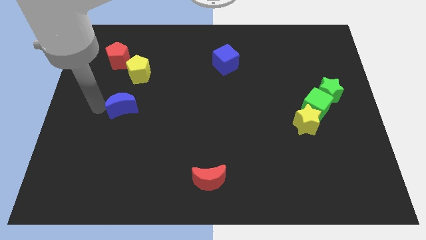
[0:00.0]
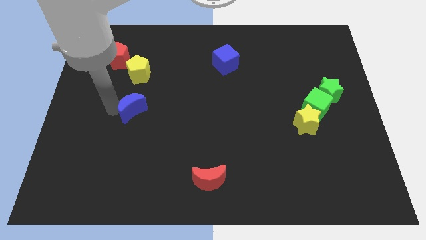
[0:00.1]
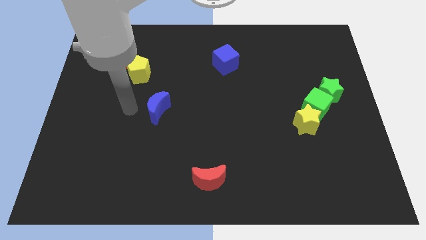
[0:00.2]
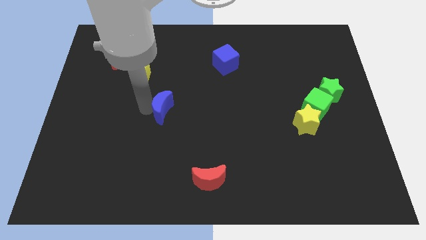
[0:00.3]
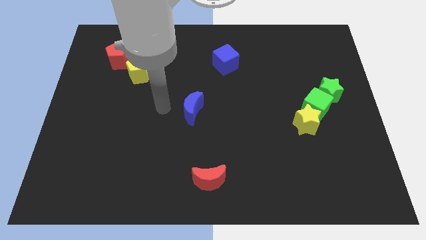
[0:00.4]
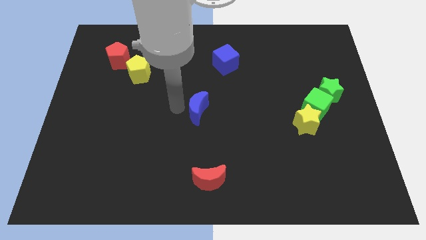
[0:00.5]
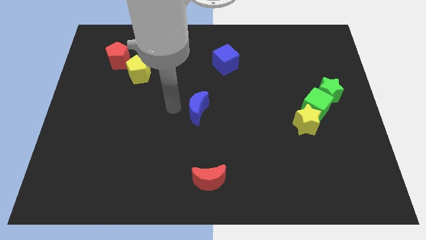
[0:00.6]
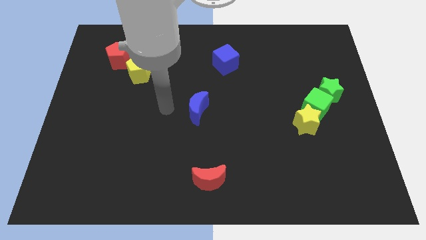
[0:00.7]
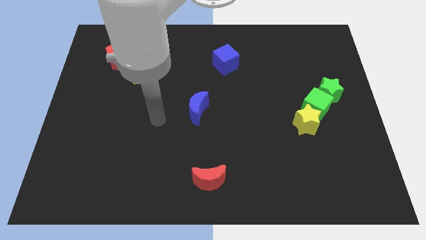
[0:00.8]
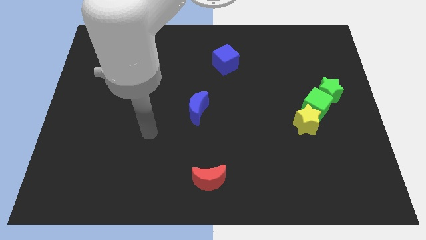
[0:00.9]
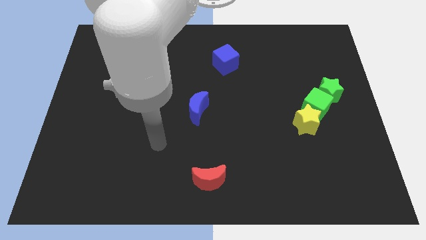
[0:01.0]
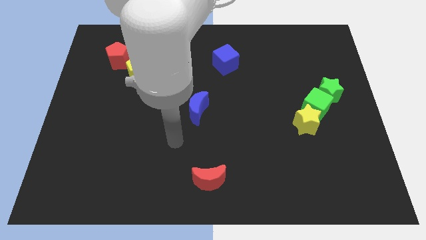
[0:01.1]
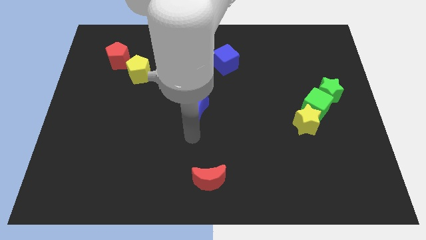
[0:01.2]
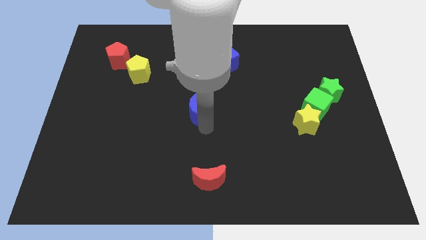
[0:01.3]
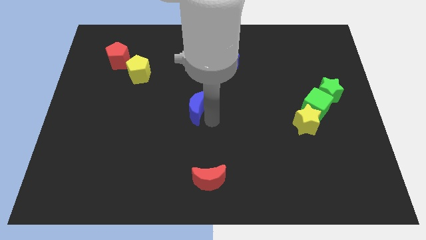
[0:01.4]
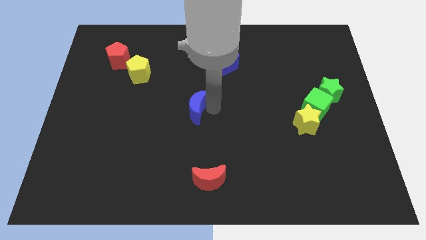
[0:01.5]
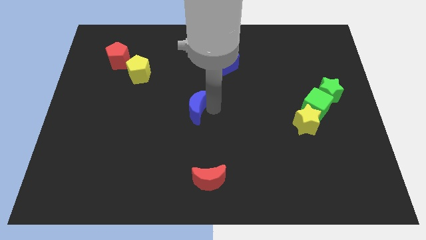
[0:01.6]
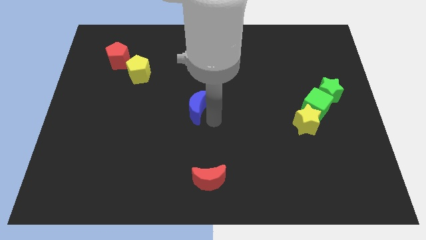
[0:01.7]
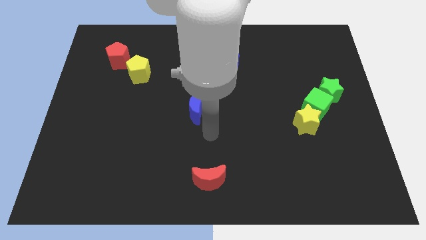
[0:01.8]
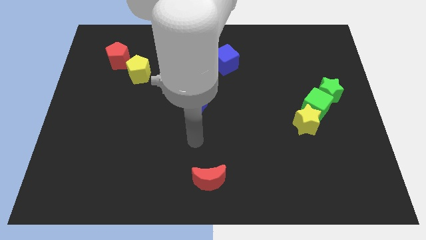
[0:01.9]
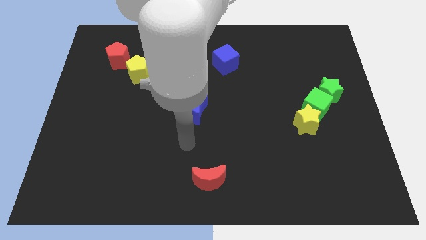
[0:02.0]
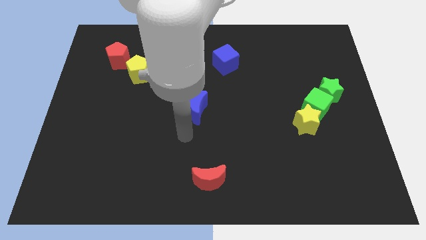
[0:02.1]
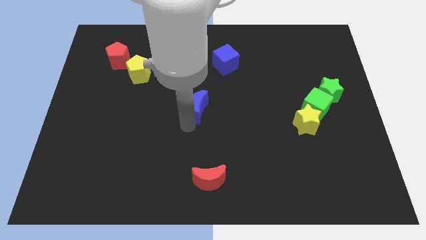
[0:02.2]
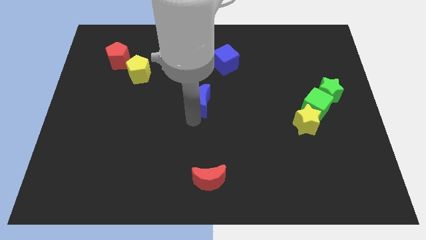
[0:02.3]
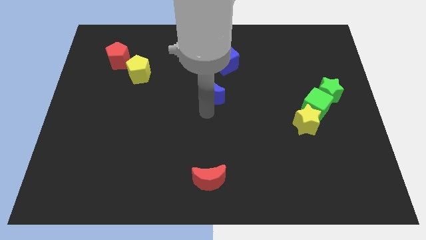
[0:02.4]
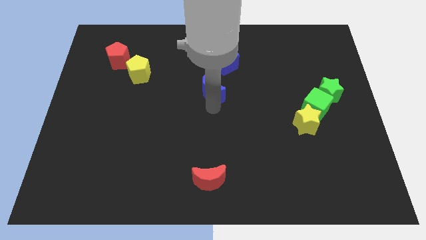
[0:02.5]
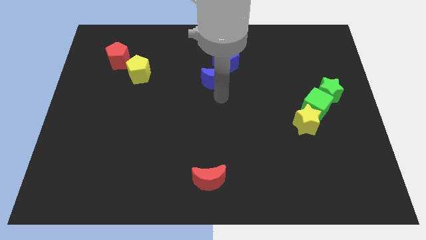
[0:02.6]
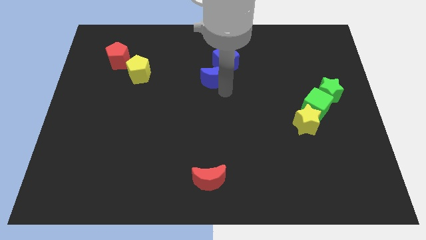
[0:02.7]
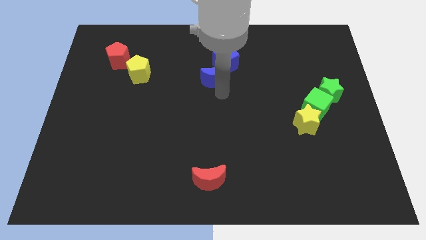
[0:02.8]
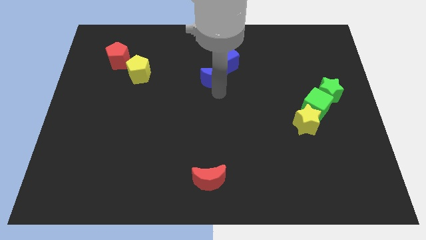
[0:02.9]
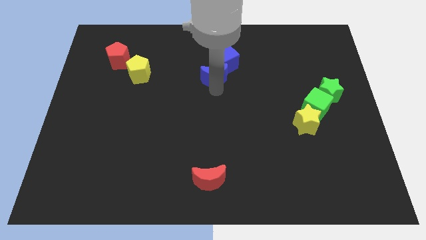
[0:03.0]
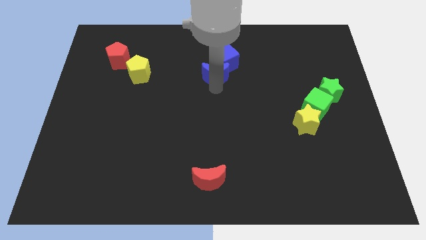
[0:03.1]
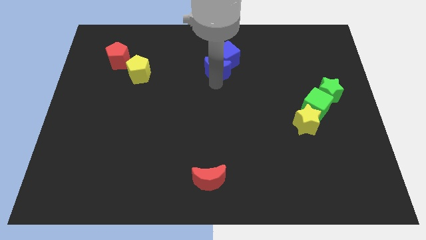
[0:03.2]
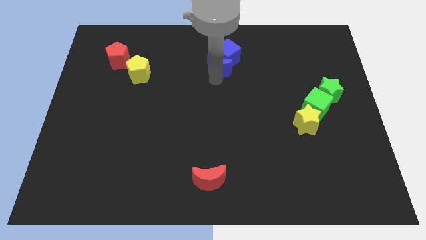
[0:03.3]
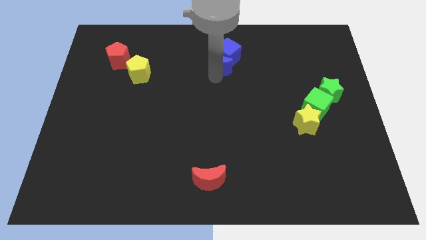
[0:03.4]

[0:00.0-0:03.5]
push the blue crescent into the blue cube

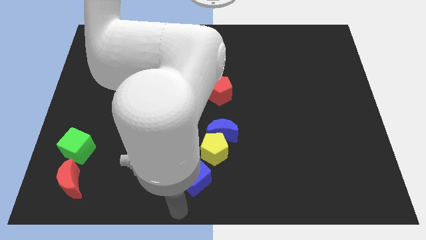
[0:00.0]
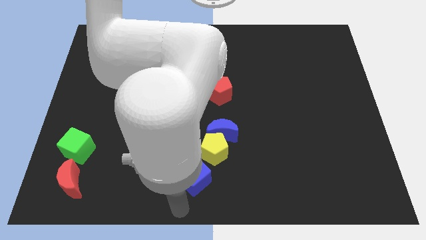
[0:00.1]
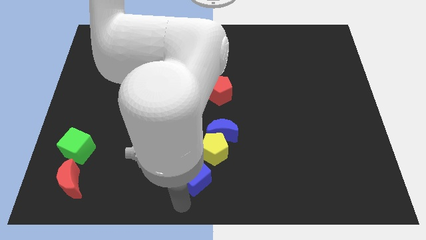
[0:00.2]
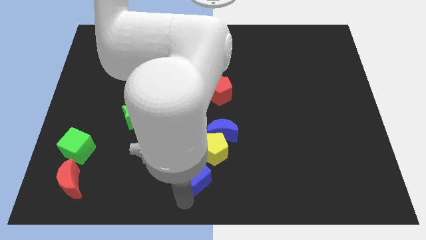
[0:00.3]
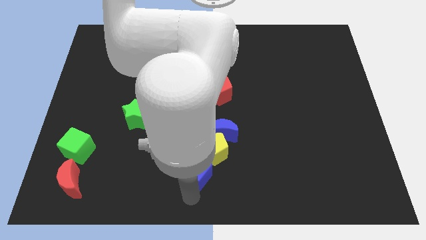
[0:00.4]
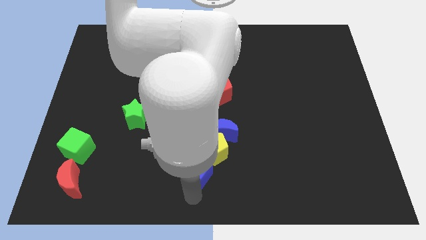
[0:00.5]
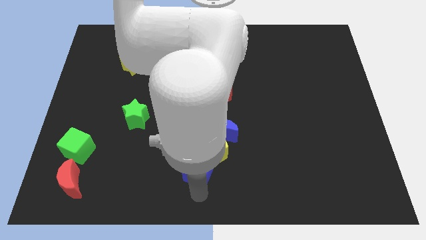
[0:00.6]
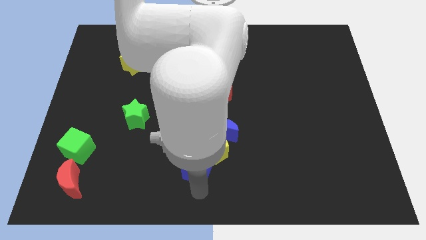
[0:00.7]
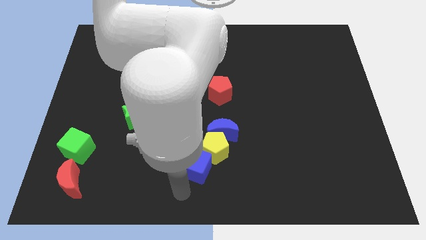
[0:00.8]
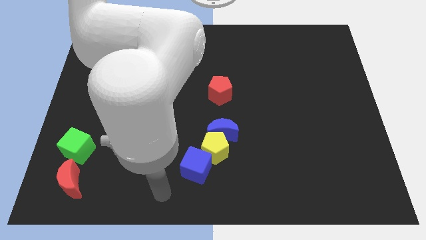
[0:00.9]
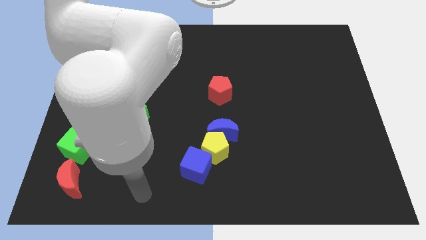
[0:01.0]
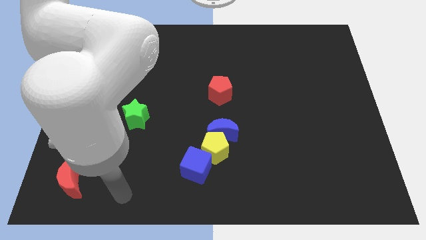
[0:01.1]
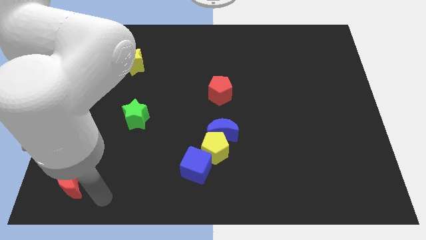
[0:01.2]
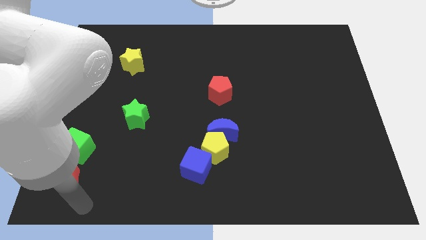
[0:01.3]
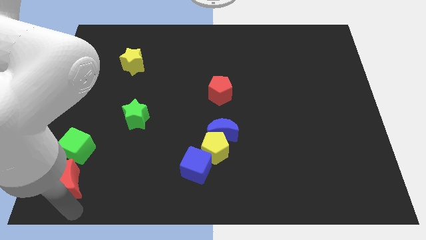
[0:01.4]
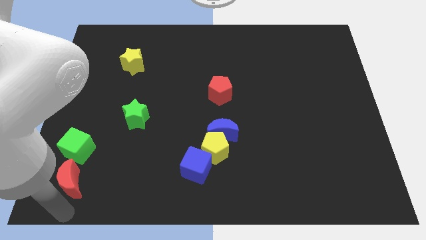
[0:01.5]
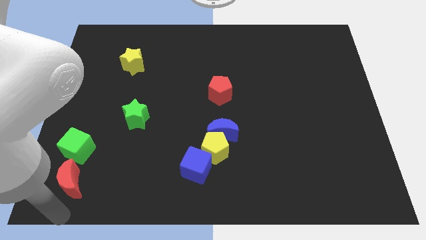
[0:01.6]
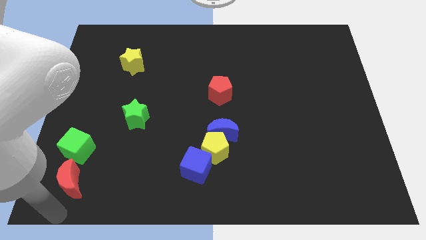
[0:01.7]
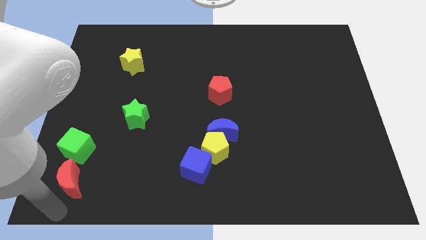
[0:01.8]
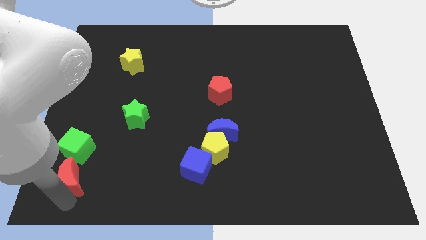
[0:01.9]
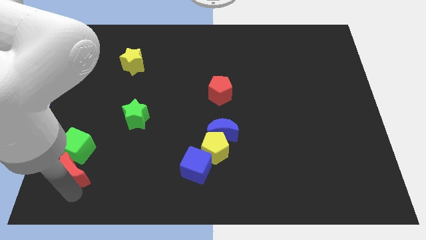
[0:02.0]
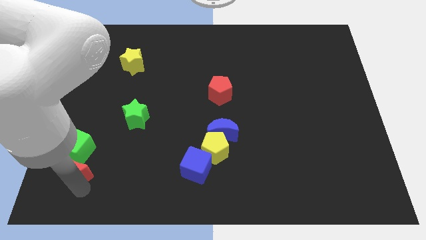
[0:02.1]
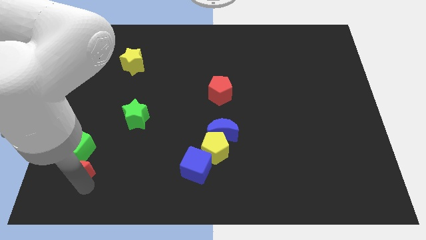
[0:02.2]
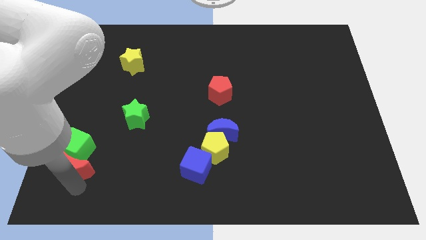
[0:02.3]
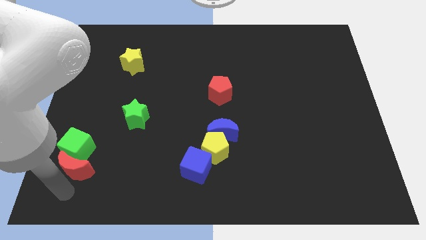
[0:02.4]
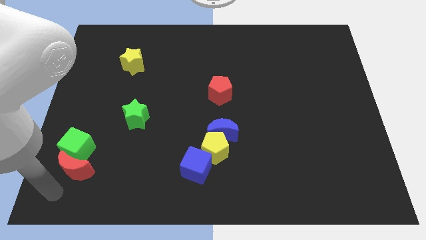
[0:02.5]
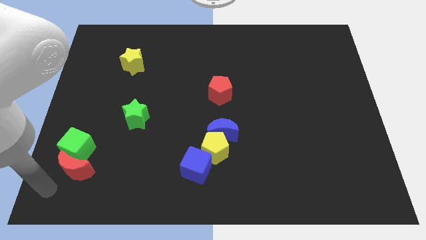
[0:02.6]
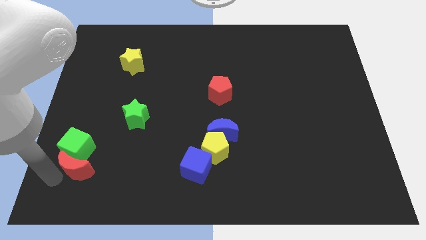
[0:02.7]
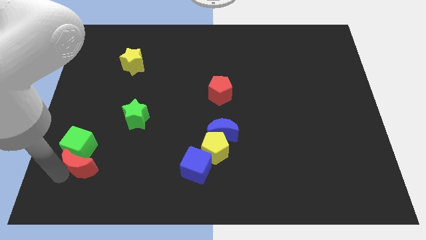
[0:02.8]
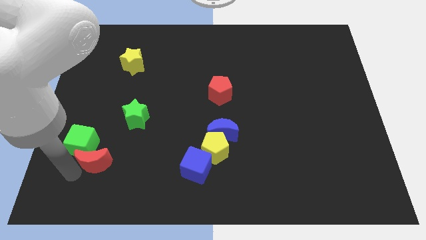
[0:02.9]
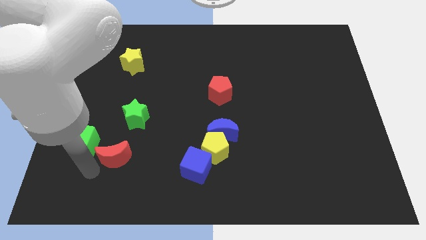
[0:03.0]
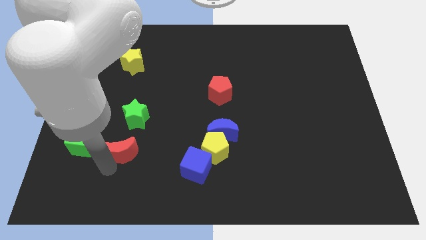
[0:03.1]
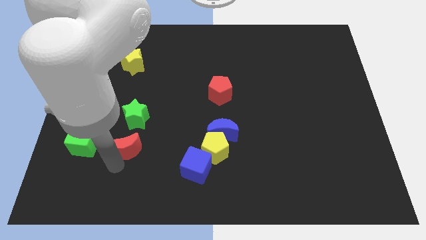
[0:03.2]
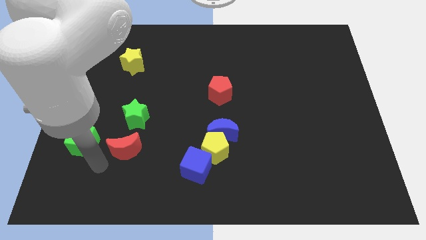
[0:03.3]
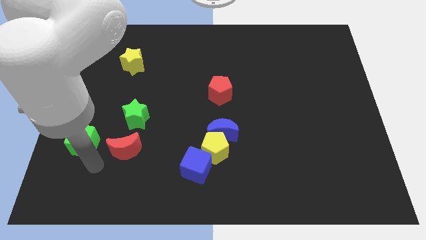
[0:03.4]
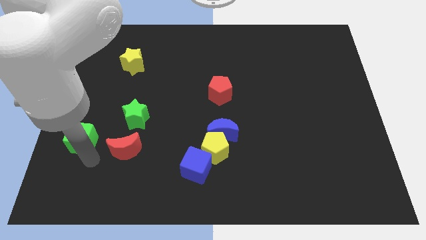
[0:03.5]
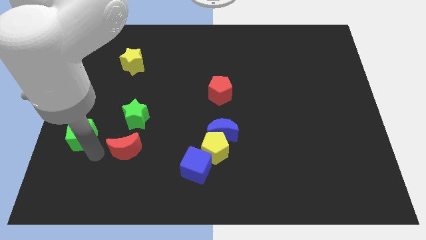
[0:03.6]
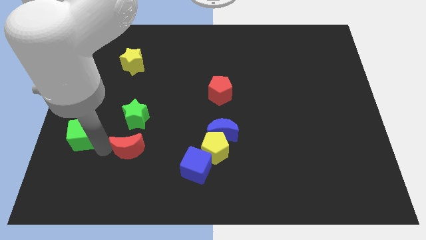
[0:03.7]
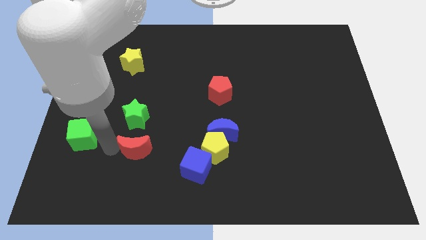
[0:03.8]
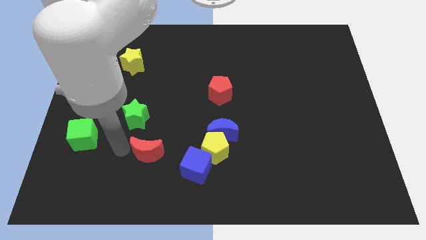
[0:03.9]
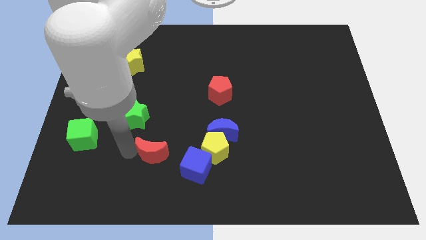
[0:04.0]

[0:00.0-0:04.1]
push the red crescent towards the left side of the blue cube

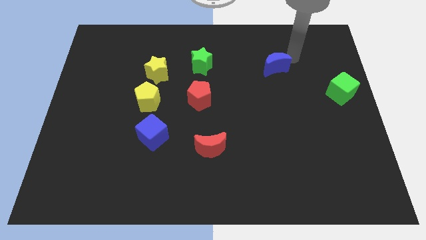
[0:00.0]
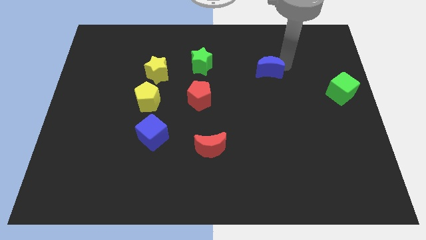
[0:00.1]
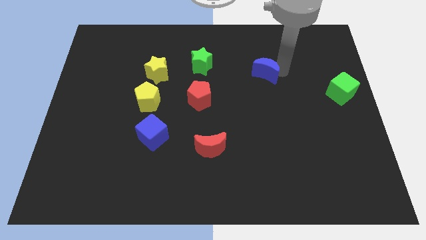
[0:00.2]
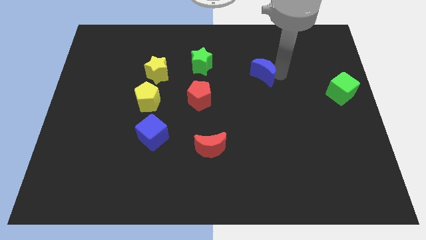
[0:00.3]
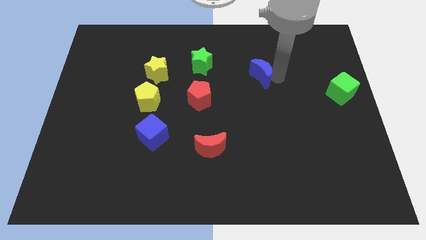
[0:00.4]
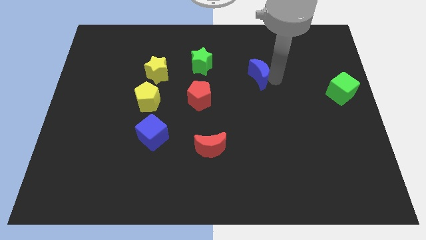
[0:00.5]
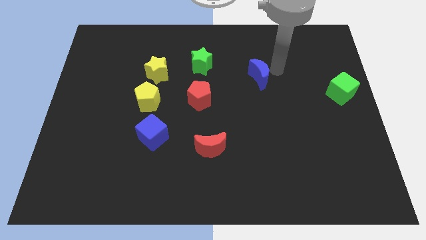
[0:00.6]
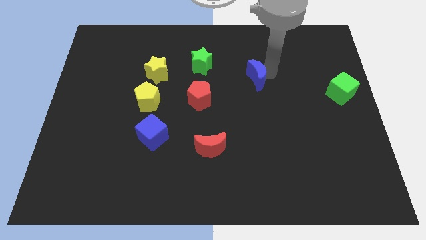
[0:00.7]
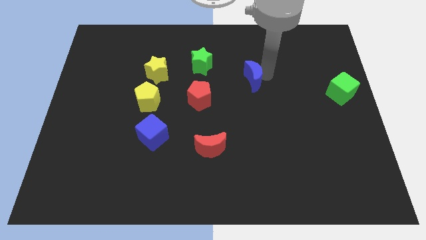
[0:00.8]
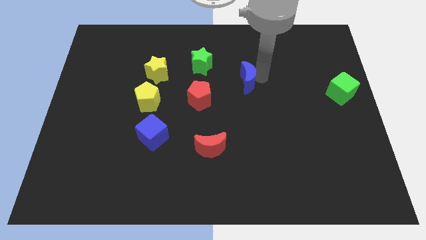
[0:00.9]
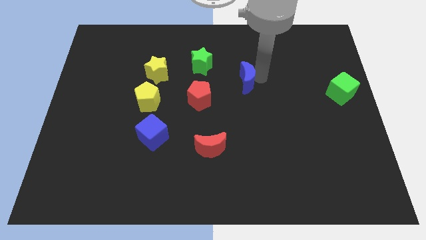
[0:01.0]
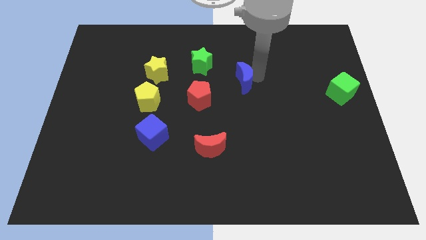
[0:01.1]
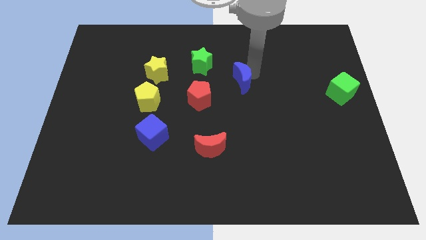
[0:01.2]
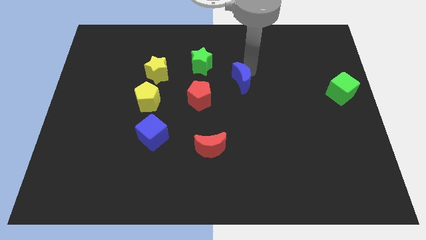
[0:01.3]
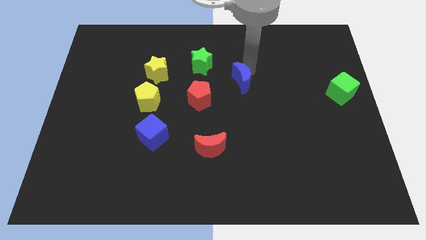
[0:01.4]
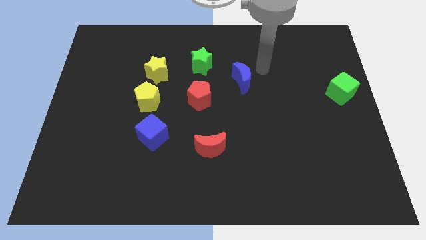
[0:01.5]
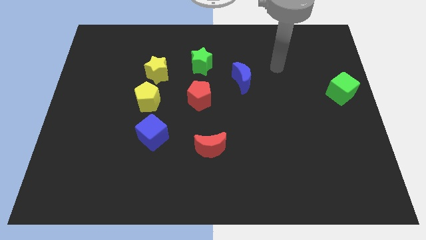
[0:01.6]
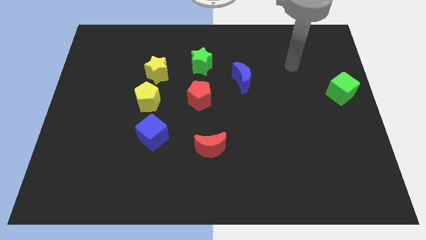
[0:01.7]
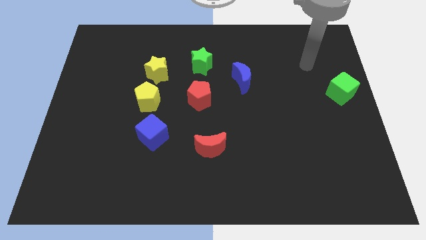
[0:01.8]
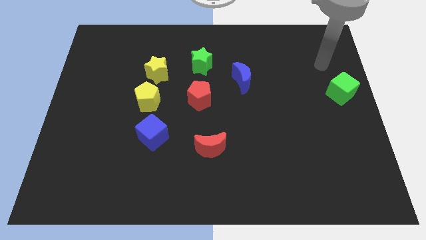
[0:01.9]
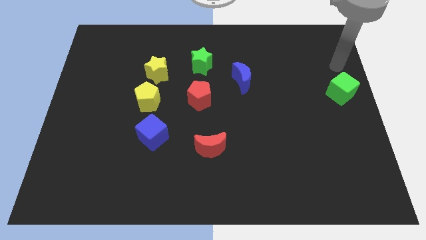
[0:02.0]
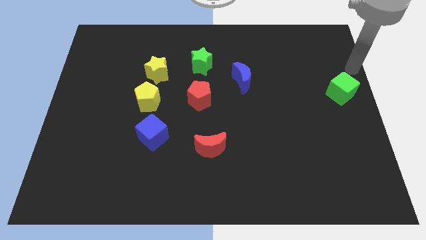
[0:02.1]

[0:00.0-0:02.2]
move the blue moon towards the red pentagon
